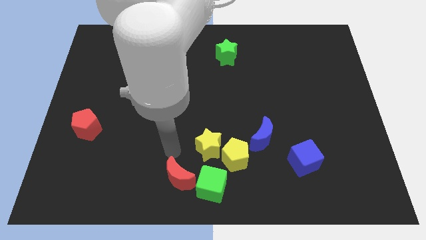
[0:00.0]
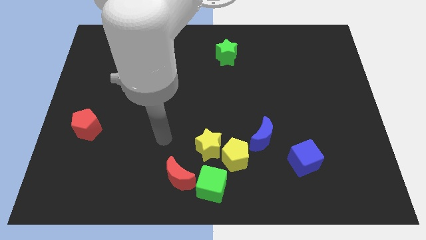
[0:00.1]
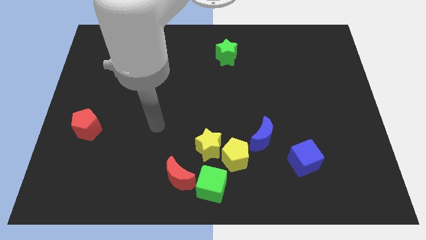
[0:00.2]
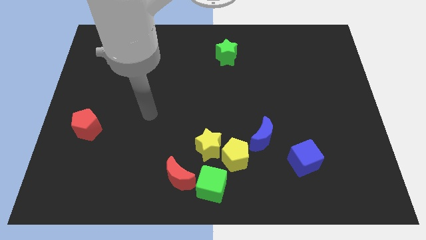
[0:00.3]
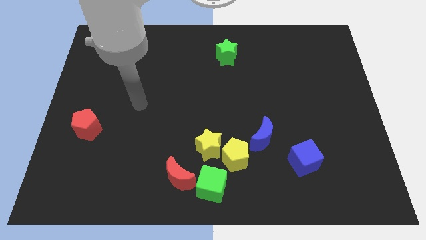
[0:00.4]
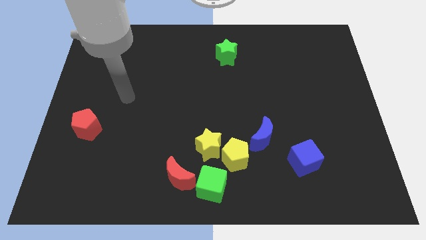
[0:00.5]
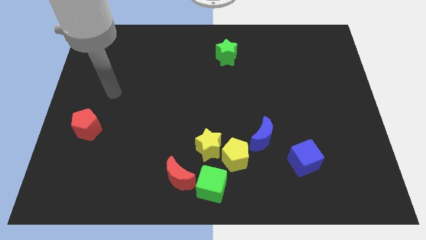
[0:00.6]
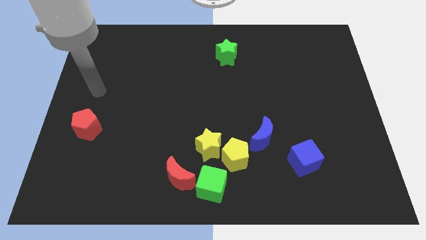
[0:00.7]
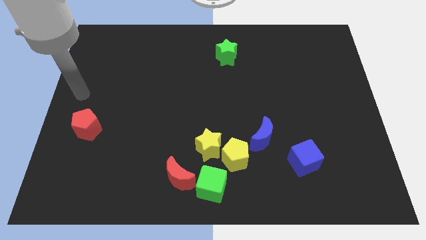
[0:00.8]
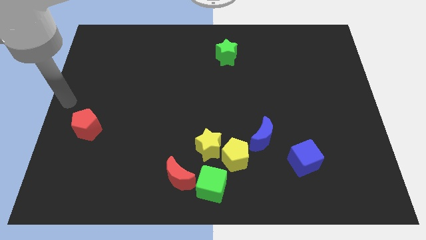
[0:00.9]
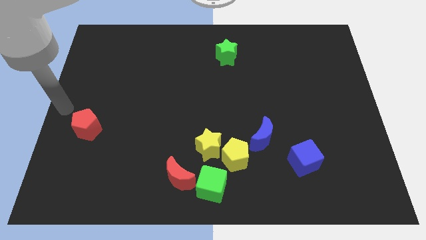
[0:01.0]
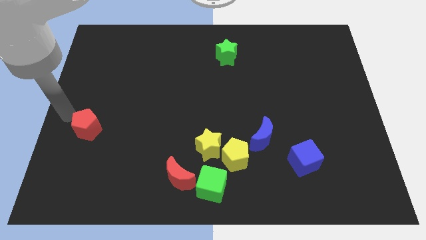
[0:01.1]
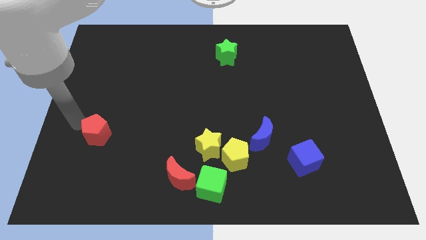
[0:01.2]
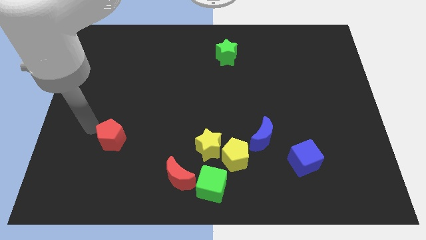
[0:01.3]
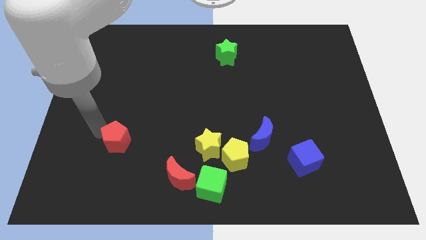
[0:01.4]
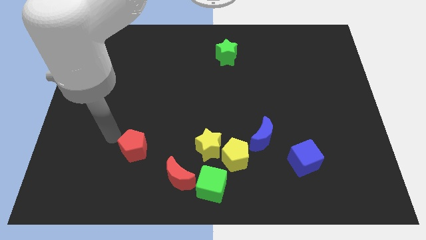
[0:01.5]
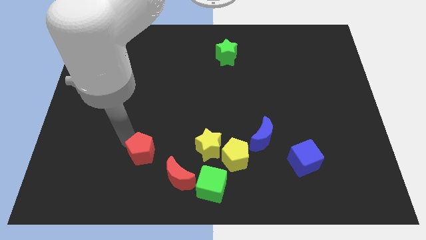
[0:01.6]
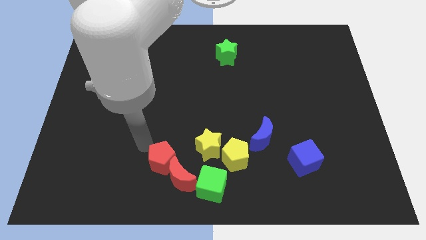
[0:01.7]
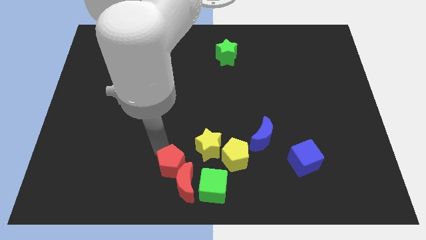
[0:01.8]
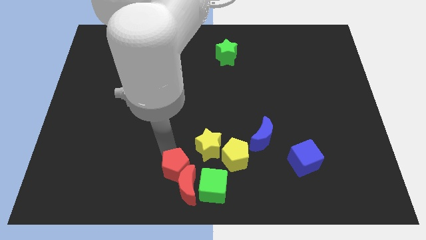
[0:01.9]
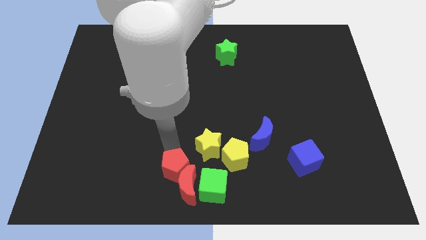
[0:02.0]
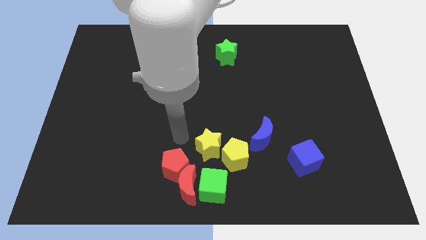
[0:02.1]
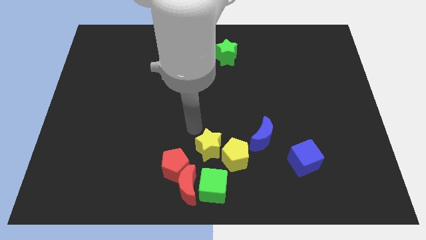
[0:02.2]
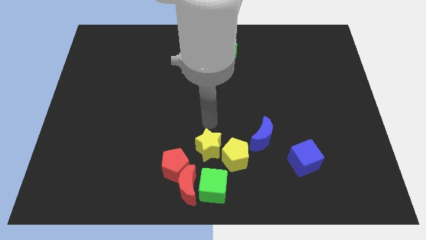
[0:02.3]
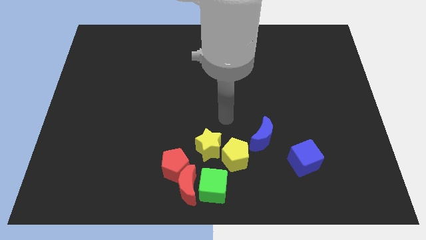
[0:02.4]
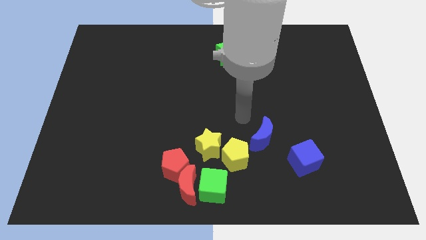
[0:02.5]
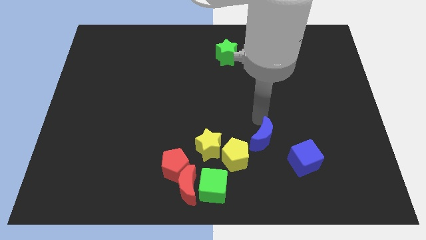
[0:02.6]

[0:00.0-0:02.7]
move red pentagon into red moon

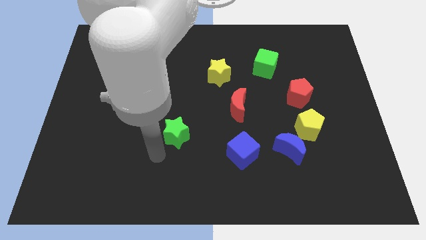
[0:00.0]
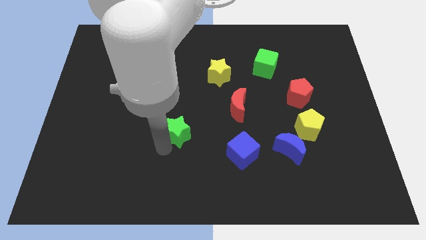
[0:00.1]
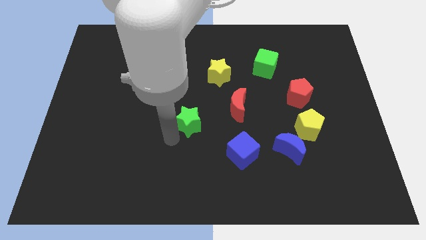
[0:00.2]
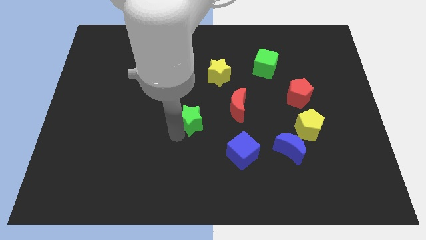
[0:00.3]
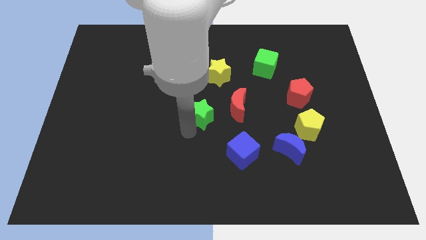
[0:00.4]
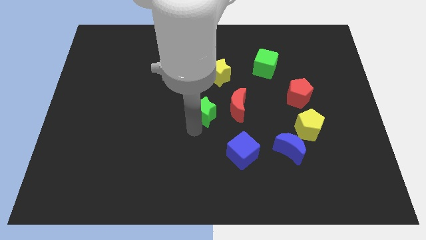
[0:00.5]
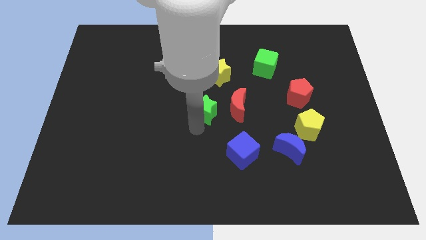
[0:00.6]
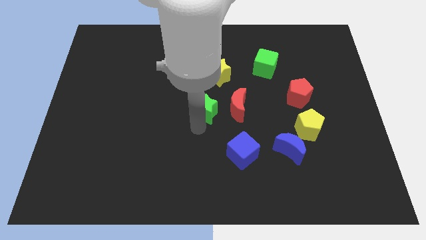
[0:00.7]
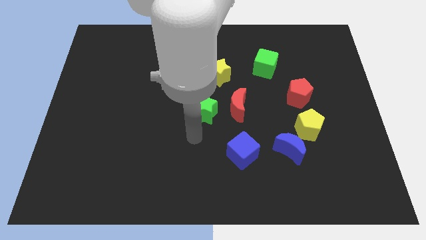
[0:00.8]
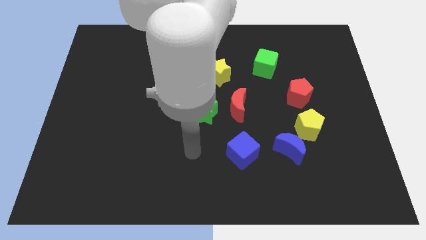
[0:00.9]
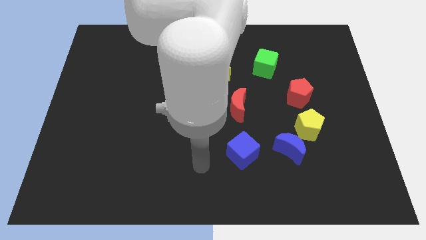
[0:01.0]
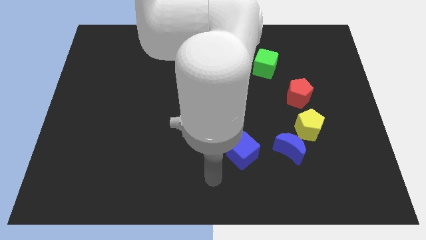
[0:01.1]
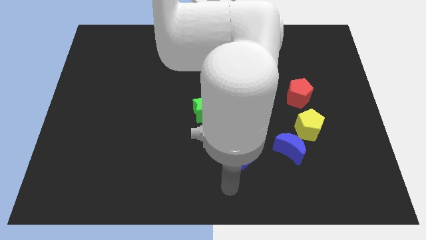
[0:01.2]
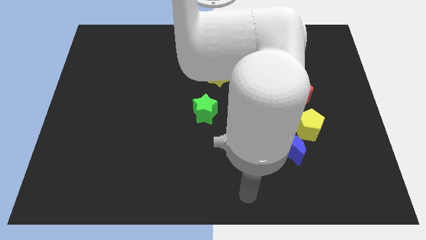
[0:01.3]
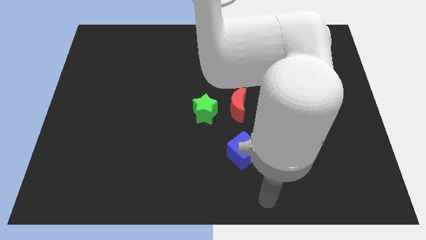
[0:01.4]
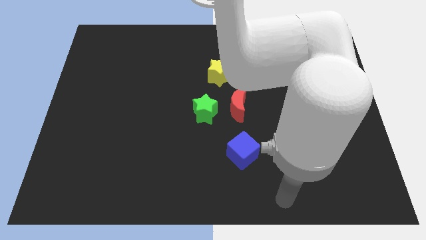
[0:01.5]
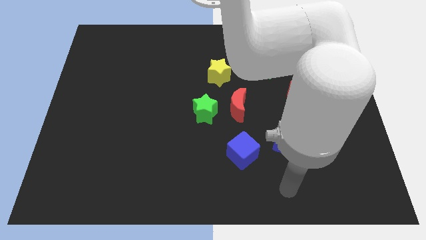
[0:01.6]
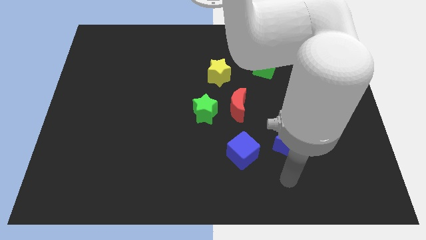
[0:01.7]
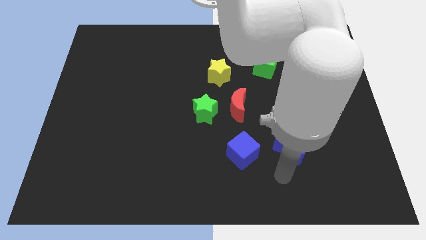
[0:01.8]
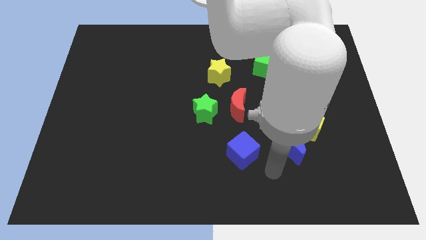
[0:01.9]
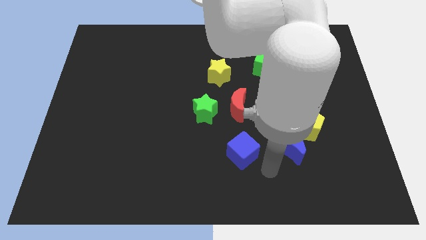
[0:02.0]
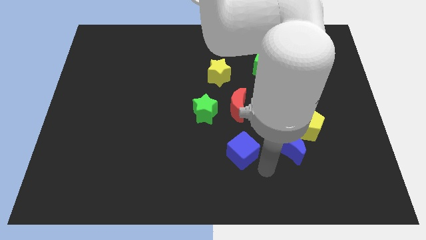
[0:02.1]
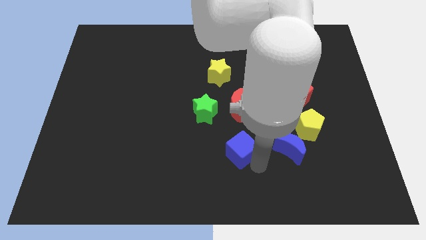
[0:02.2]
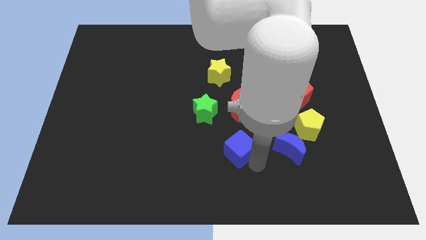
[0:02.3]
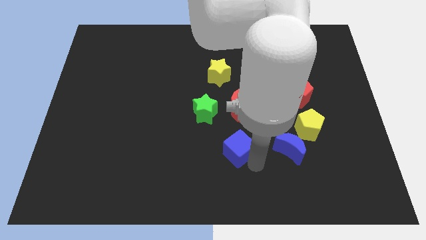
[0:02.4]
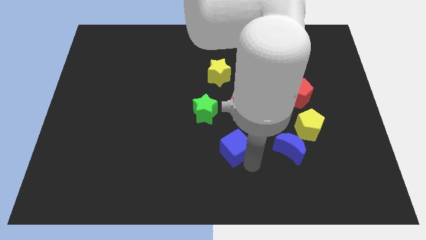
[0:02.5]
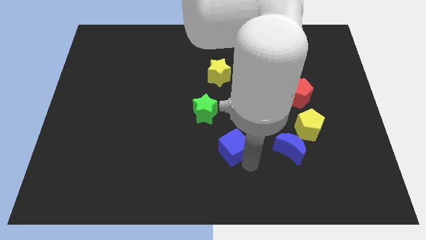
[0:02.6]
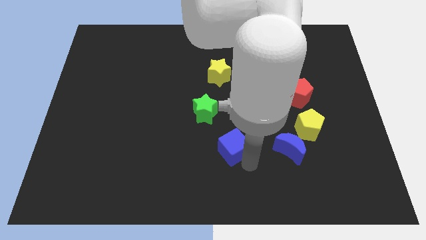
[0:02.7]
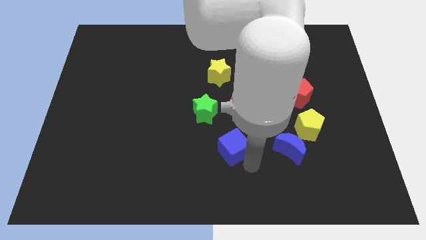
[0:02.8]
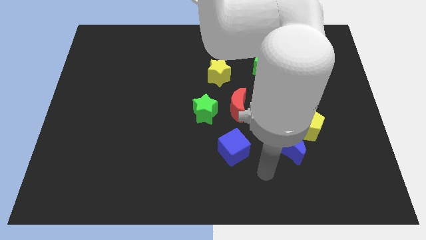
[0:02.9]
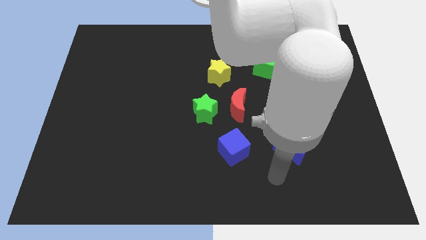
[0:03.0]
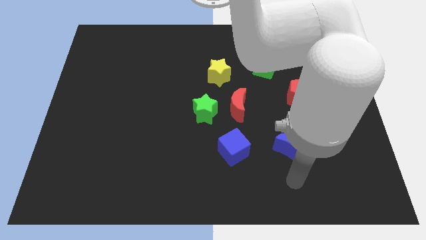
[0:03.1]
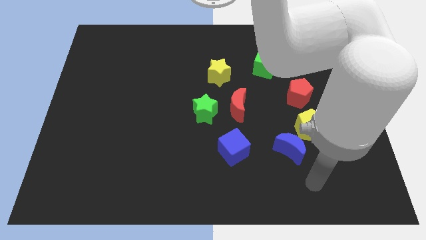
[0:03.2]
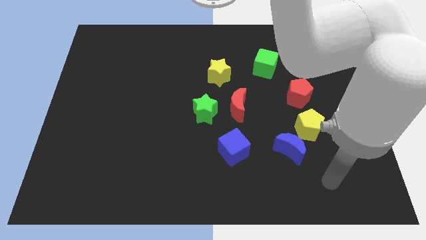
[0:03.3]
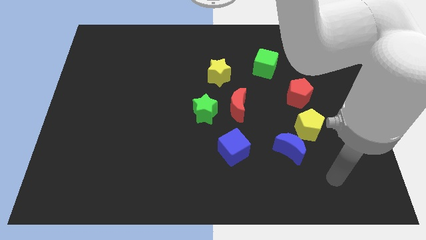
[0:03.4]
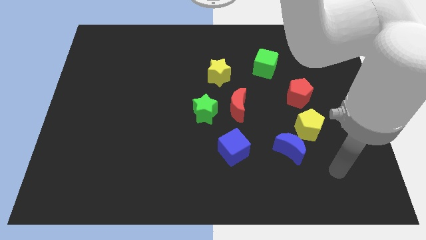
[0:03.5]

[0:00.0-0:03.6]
move the green to the left to the red crescent

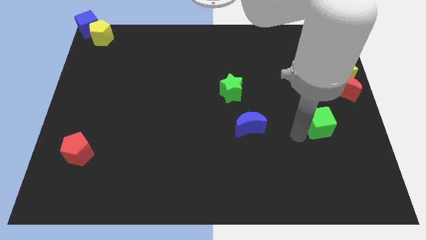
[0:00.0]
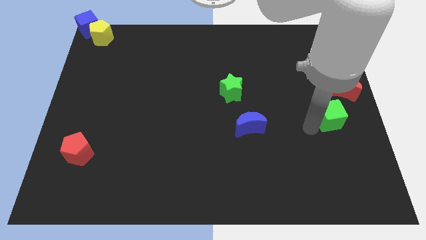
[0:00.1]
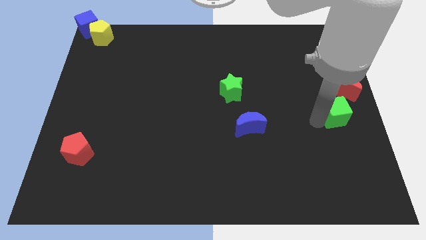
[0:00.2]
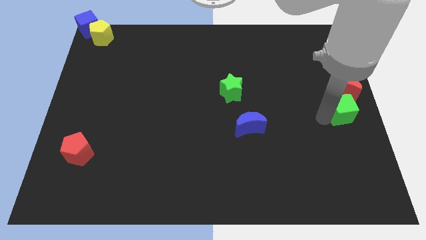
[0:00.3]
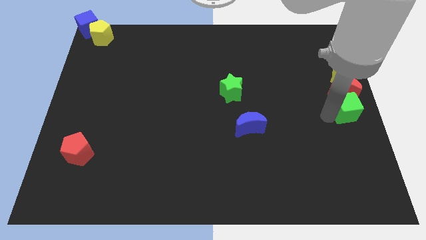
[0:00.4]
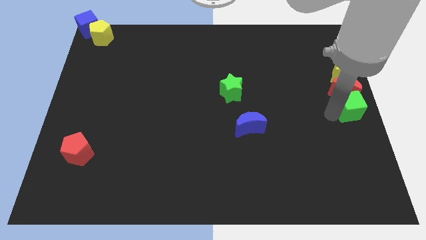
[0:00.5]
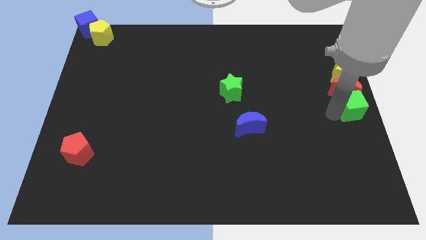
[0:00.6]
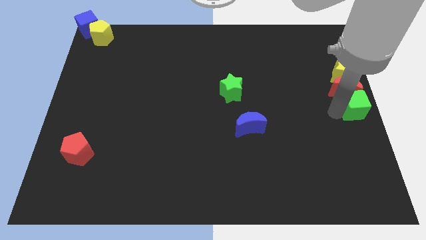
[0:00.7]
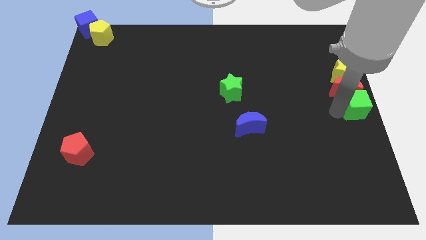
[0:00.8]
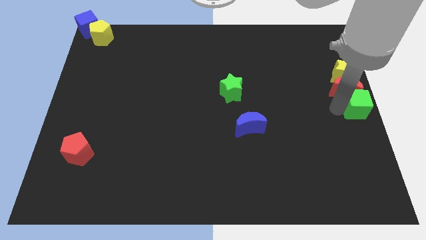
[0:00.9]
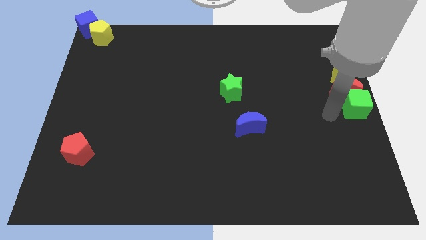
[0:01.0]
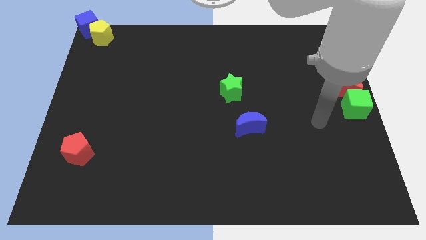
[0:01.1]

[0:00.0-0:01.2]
place the green cube below the red crescent to form a vertical line

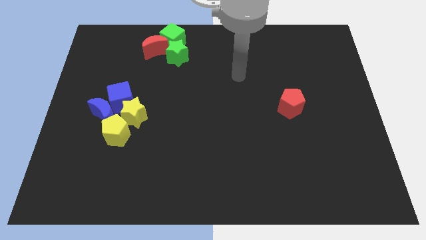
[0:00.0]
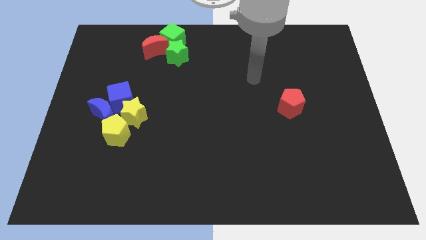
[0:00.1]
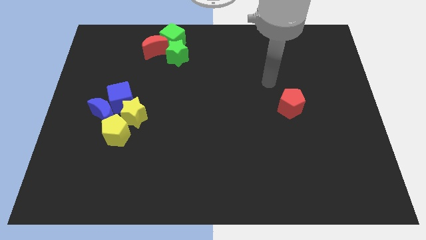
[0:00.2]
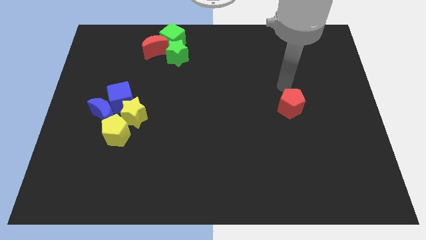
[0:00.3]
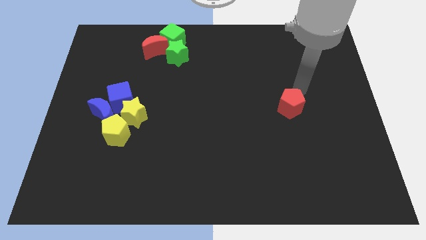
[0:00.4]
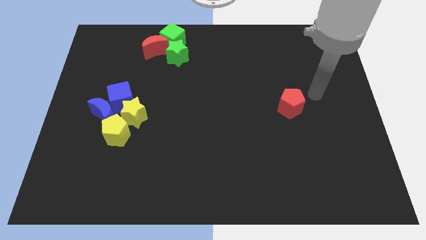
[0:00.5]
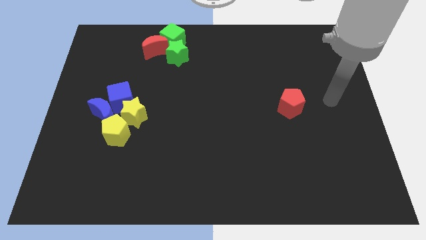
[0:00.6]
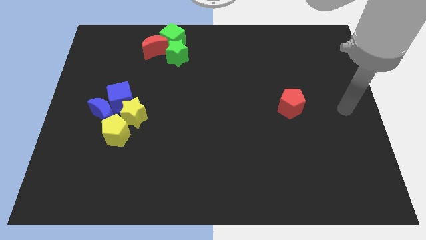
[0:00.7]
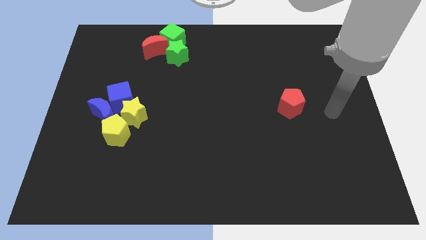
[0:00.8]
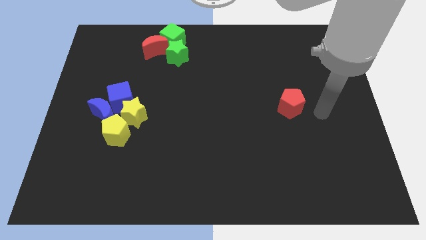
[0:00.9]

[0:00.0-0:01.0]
place your arm to the right side of red pentagon

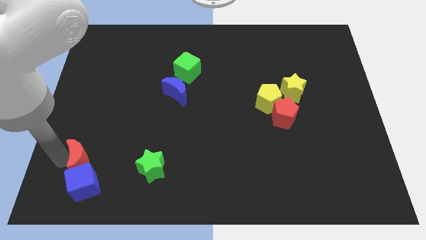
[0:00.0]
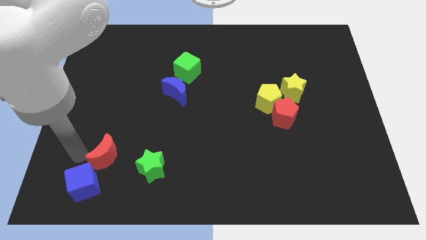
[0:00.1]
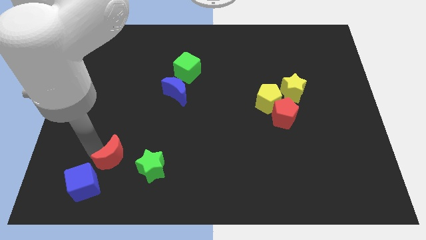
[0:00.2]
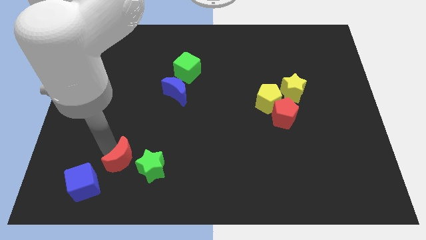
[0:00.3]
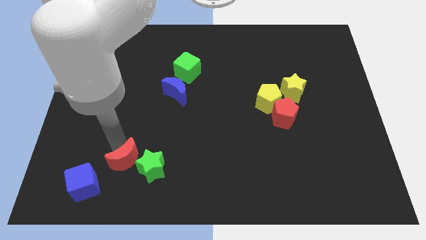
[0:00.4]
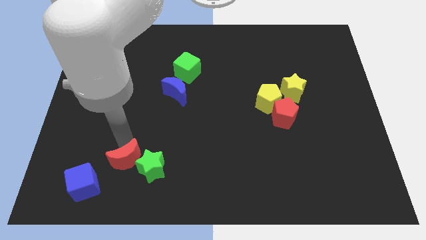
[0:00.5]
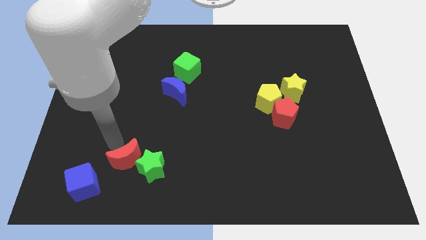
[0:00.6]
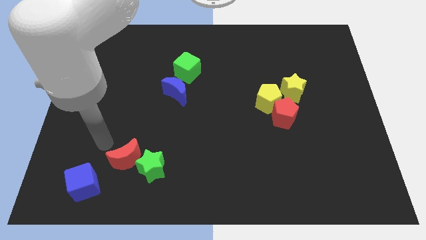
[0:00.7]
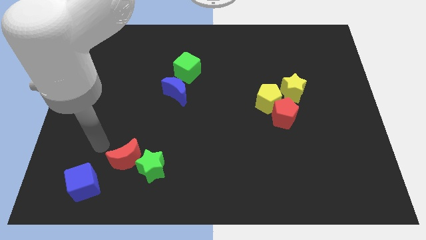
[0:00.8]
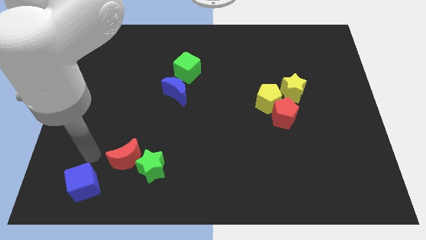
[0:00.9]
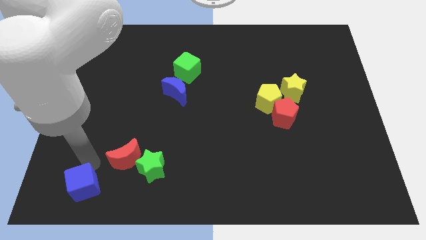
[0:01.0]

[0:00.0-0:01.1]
push the red crescent to the left of the green star
